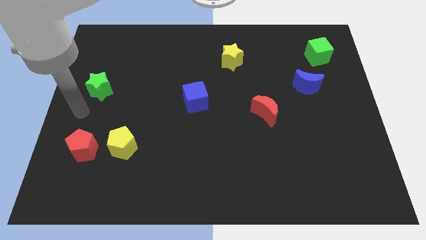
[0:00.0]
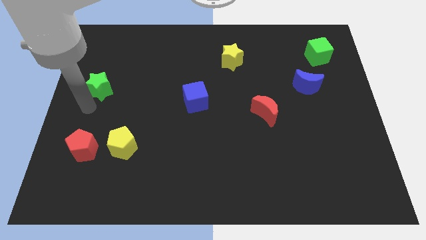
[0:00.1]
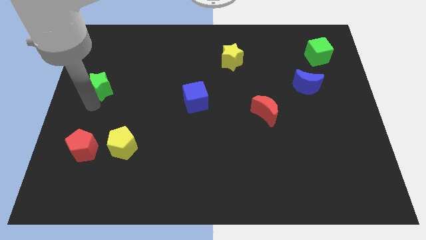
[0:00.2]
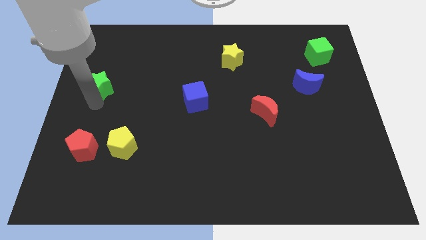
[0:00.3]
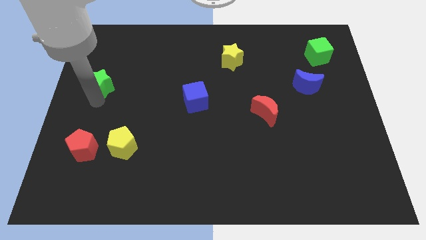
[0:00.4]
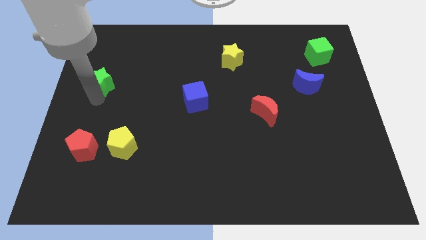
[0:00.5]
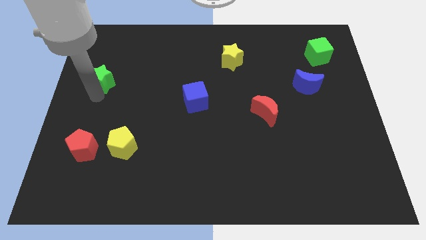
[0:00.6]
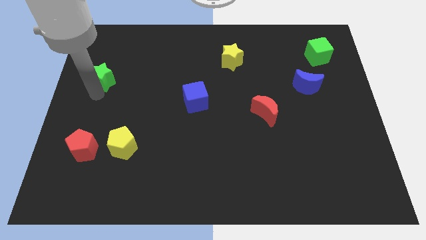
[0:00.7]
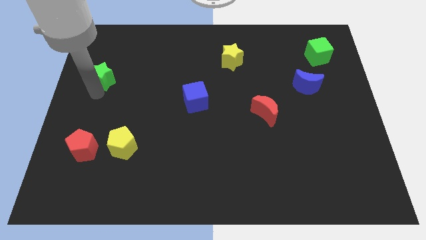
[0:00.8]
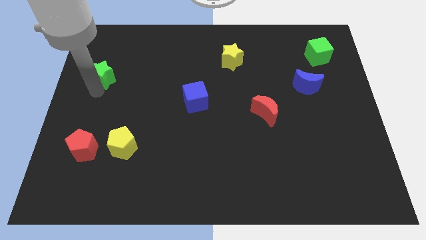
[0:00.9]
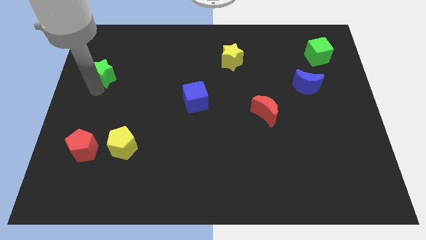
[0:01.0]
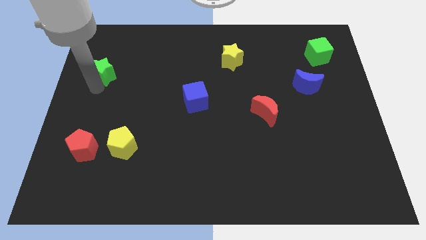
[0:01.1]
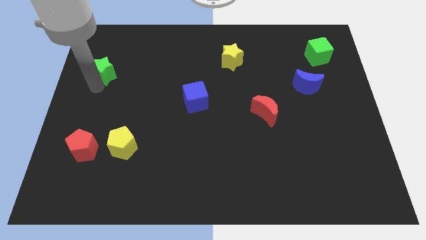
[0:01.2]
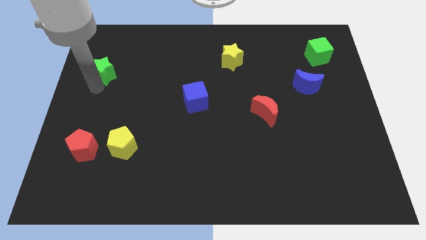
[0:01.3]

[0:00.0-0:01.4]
push the green star upwards

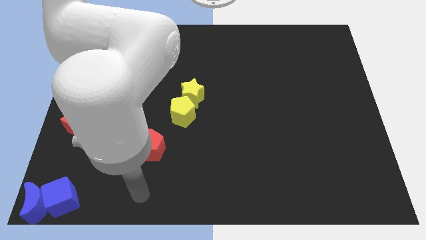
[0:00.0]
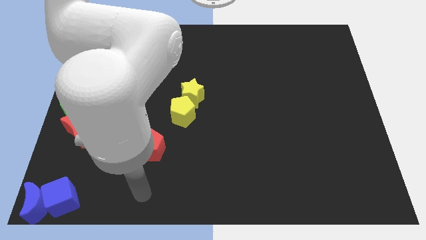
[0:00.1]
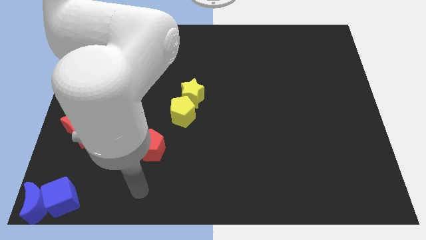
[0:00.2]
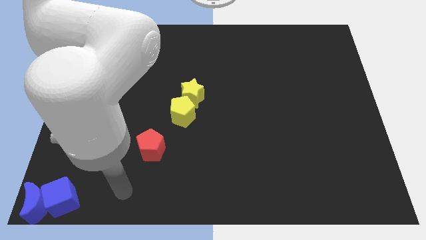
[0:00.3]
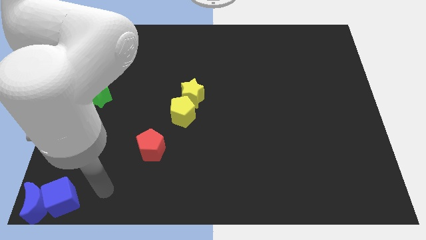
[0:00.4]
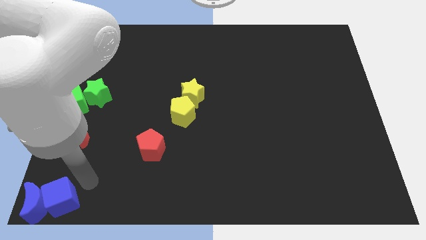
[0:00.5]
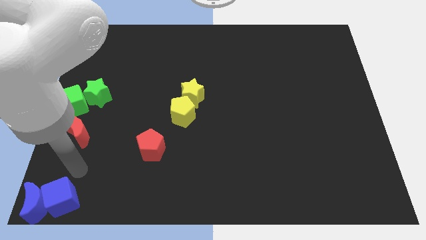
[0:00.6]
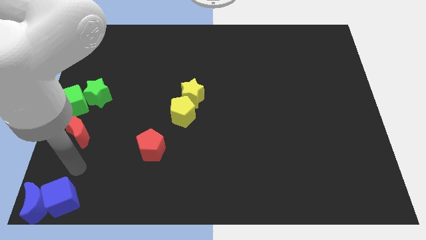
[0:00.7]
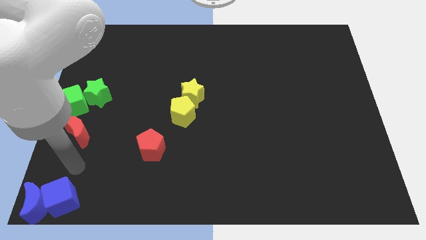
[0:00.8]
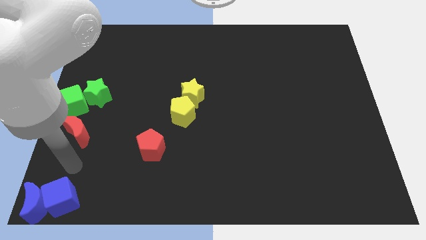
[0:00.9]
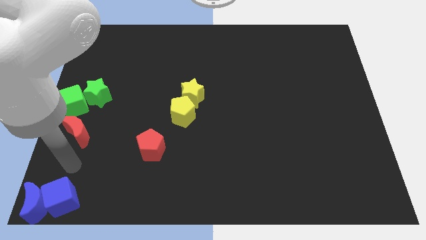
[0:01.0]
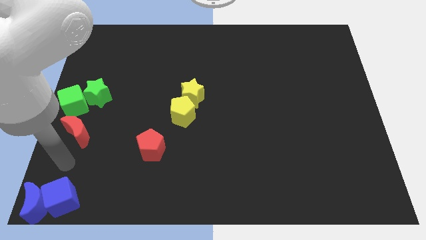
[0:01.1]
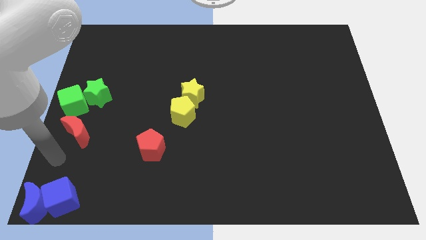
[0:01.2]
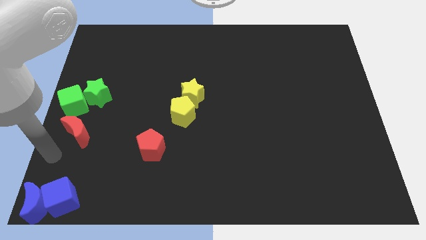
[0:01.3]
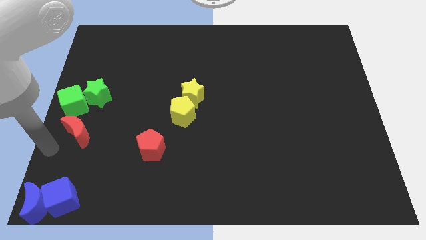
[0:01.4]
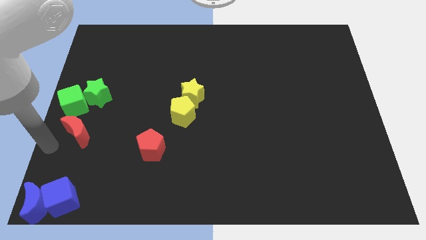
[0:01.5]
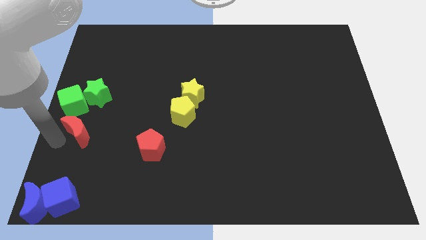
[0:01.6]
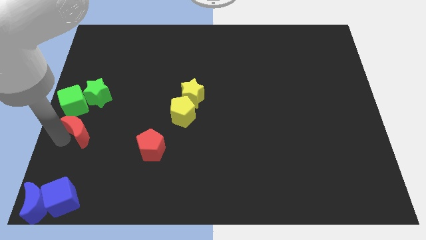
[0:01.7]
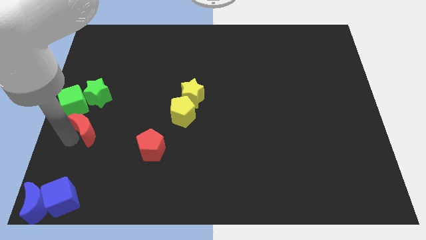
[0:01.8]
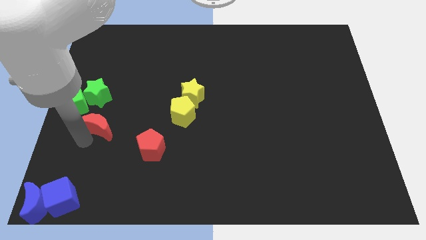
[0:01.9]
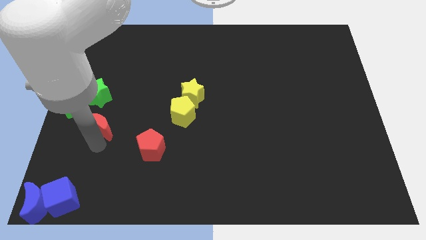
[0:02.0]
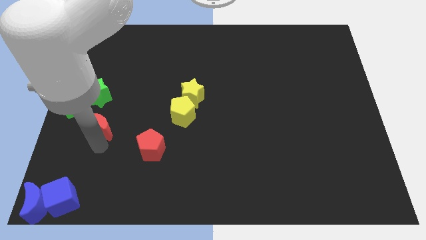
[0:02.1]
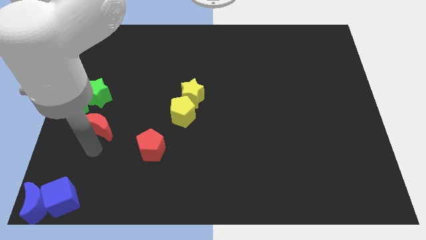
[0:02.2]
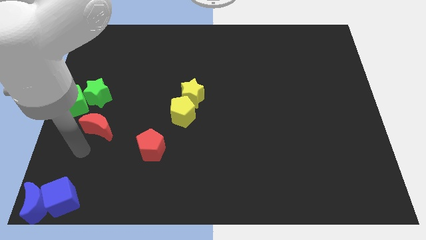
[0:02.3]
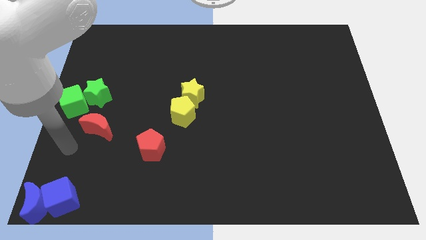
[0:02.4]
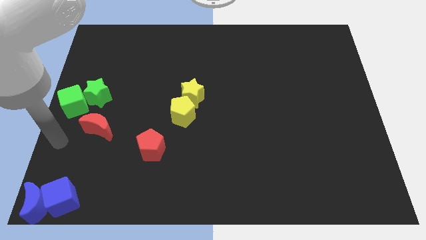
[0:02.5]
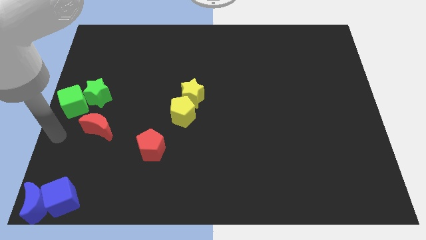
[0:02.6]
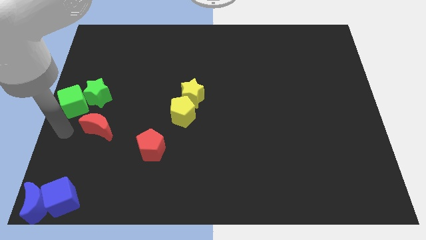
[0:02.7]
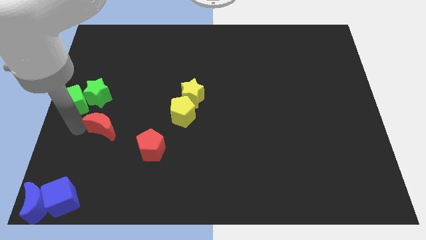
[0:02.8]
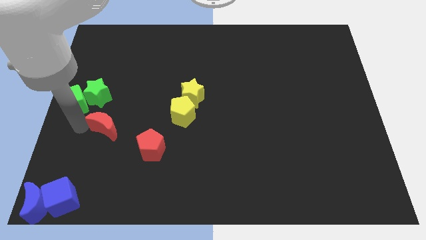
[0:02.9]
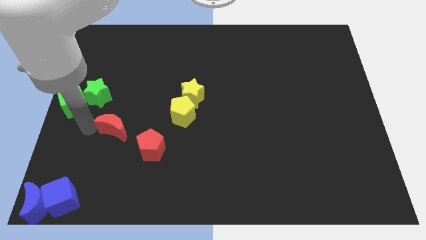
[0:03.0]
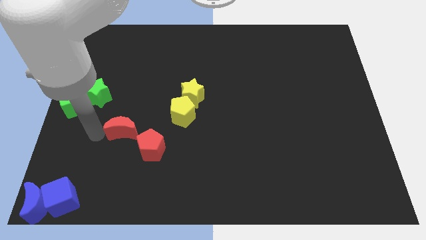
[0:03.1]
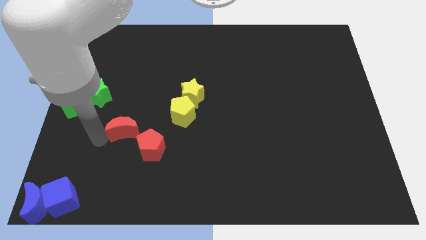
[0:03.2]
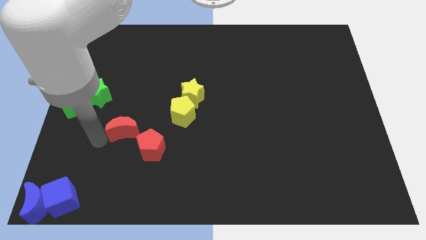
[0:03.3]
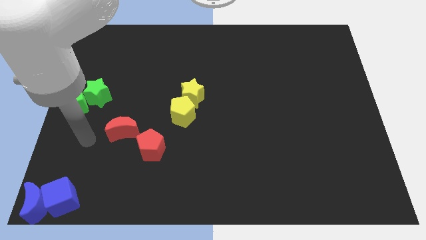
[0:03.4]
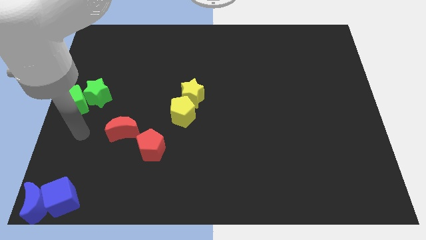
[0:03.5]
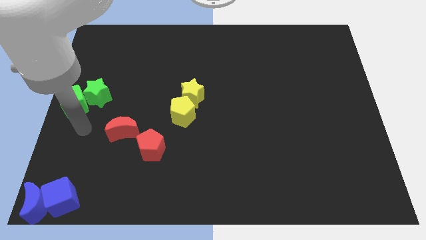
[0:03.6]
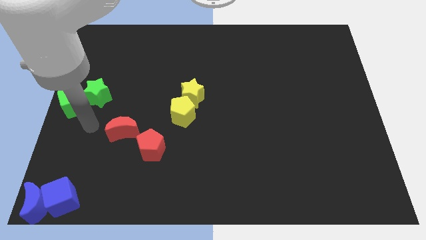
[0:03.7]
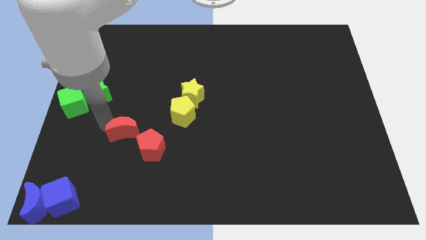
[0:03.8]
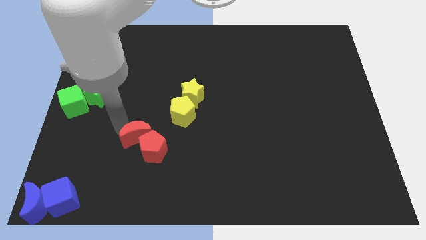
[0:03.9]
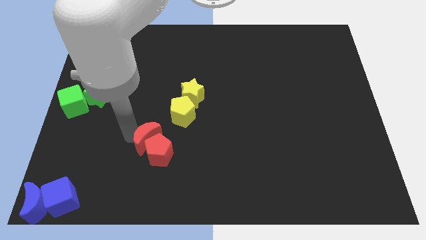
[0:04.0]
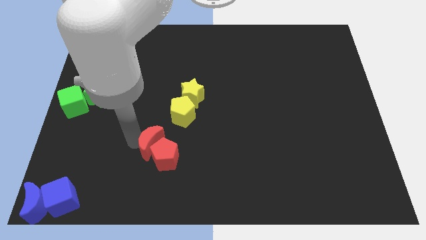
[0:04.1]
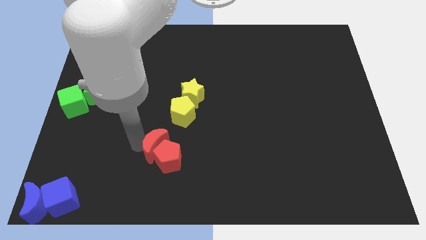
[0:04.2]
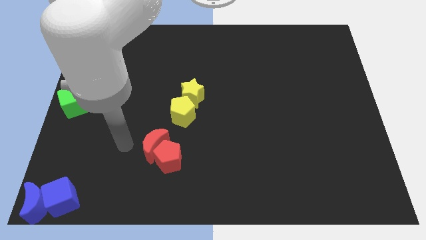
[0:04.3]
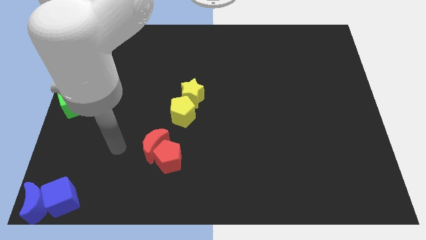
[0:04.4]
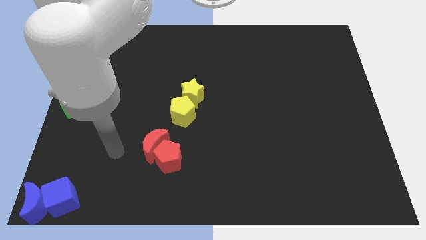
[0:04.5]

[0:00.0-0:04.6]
move the red moon into the red pentagon

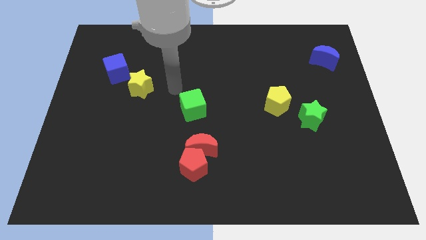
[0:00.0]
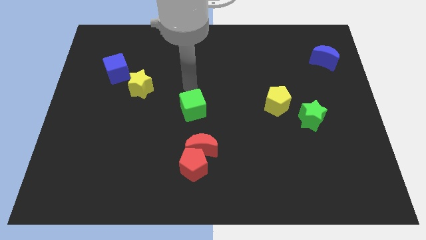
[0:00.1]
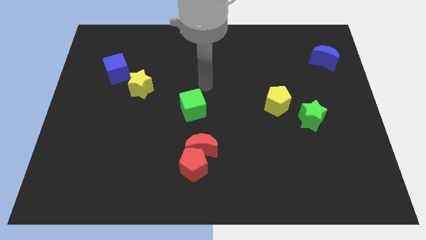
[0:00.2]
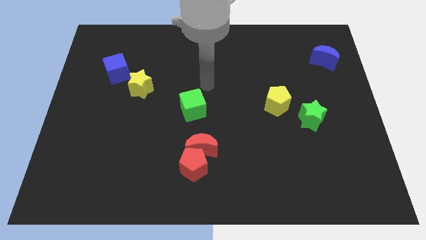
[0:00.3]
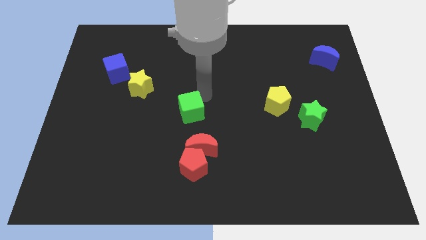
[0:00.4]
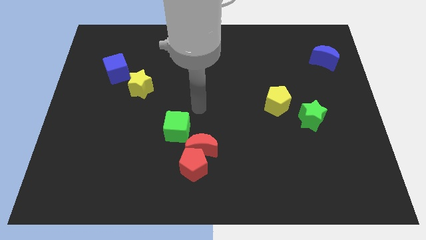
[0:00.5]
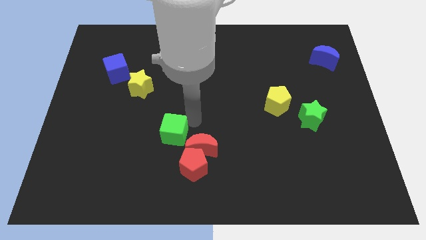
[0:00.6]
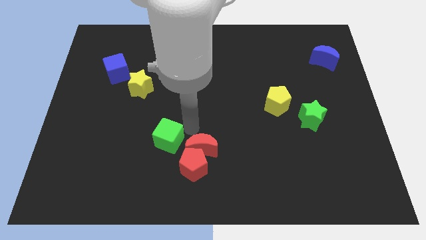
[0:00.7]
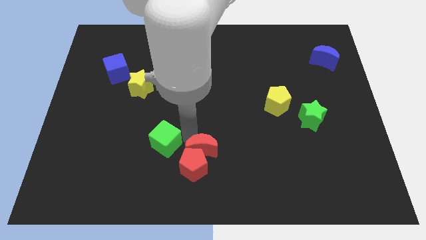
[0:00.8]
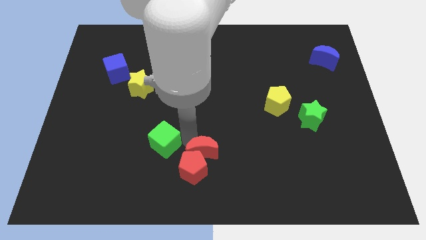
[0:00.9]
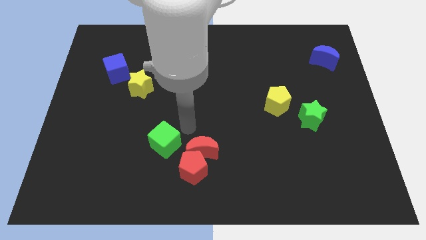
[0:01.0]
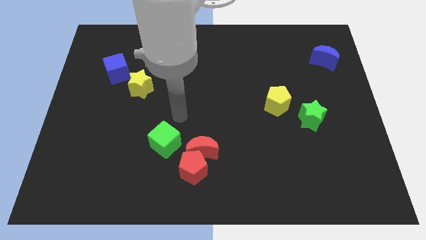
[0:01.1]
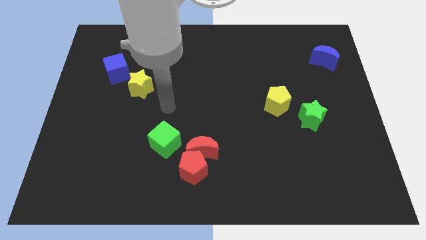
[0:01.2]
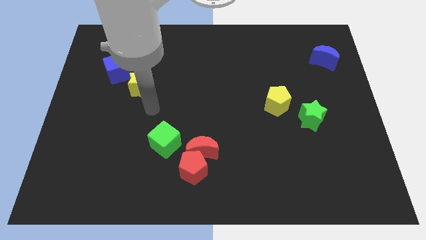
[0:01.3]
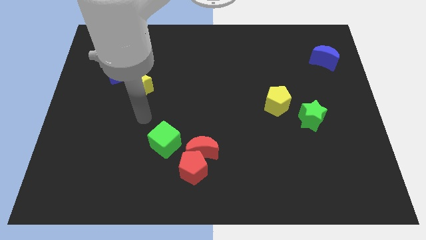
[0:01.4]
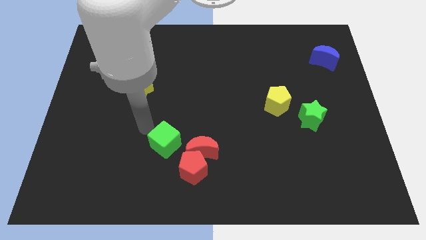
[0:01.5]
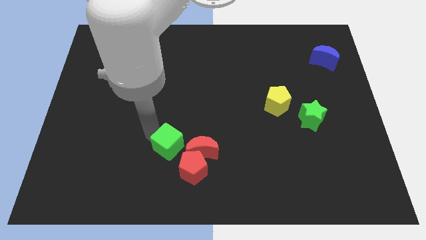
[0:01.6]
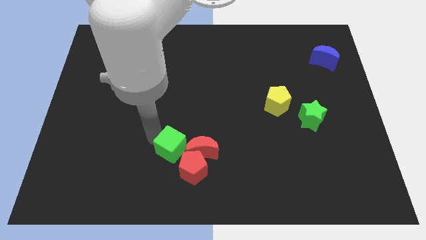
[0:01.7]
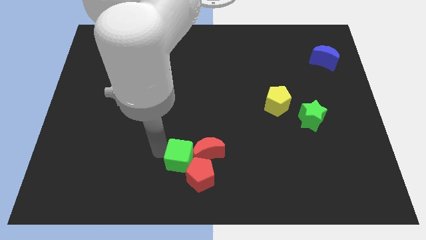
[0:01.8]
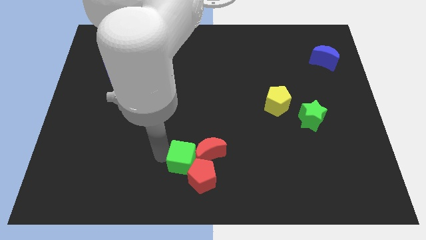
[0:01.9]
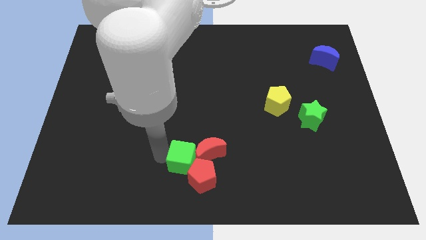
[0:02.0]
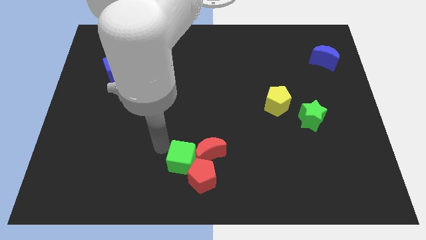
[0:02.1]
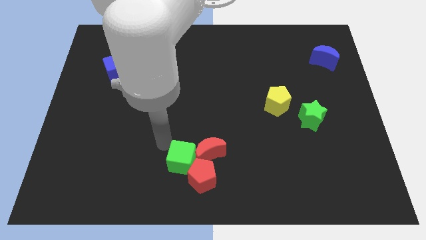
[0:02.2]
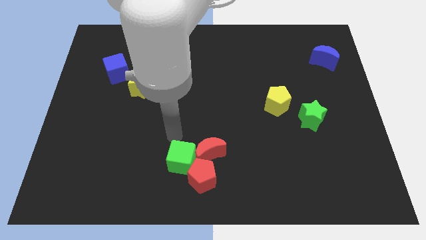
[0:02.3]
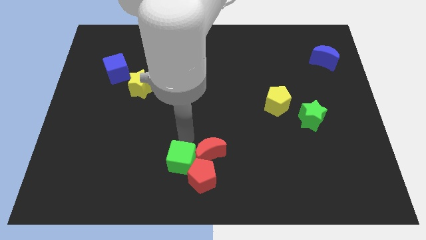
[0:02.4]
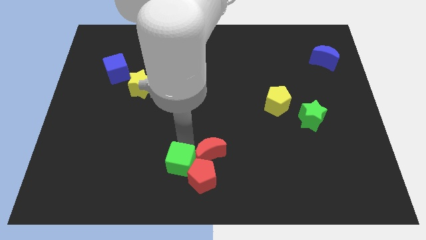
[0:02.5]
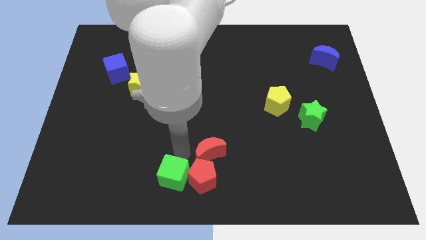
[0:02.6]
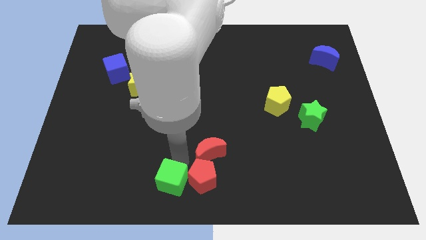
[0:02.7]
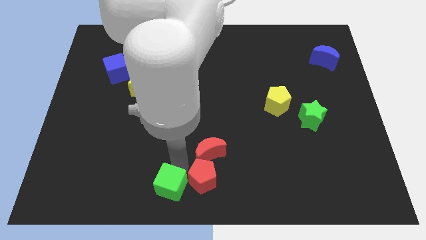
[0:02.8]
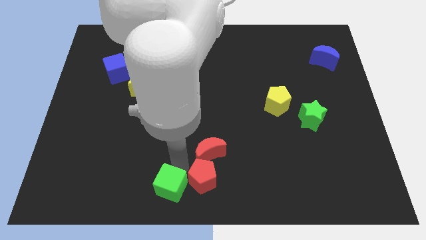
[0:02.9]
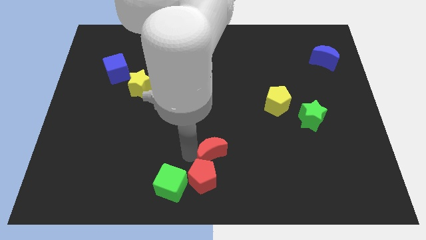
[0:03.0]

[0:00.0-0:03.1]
move the green cube to the left of the red pentagon at the bottom
